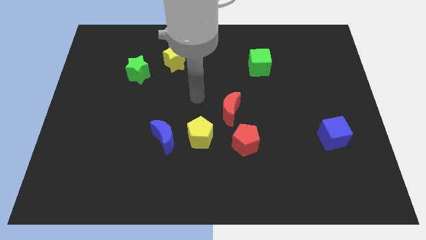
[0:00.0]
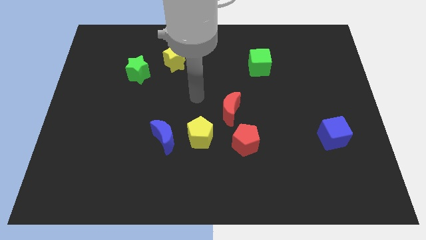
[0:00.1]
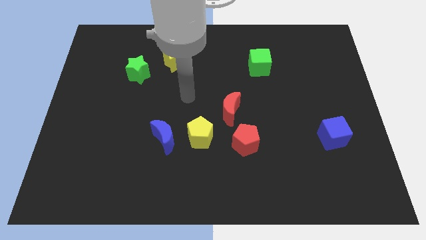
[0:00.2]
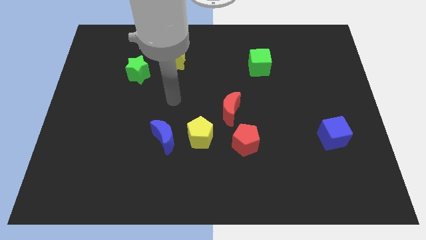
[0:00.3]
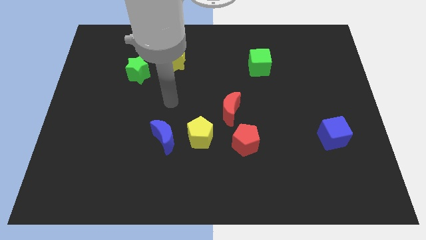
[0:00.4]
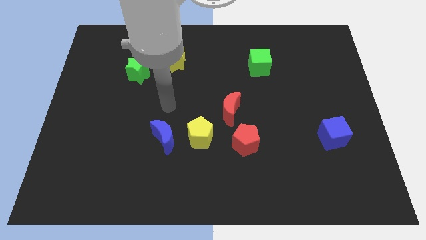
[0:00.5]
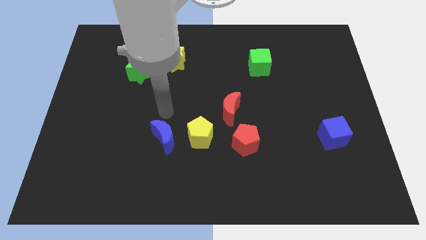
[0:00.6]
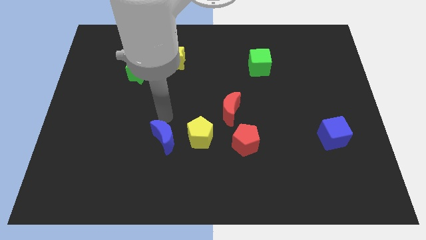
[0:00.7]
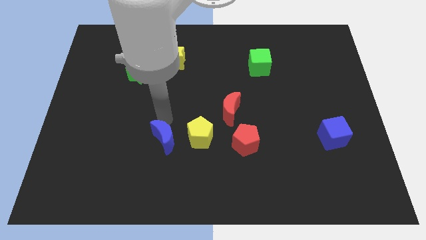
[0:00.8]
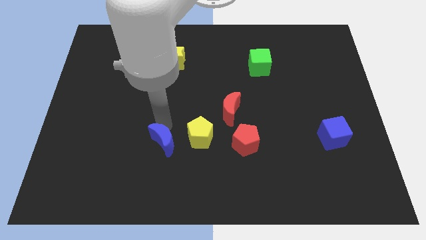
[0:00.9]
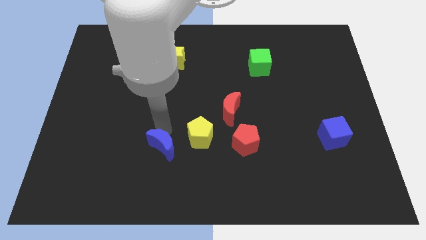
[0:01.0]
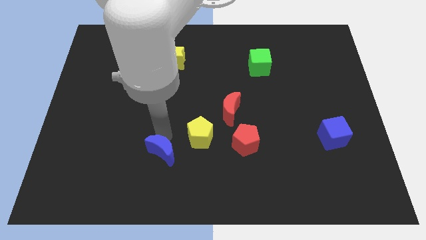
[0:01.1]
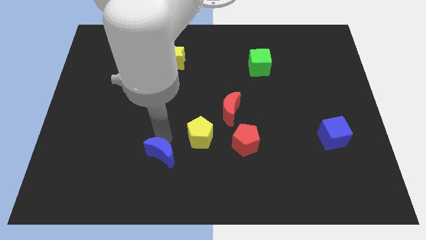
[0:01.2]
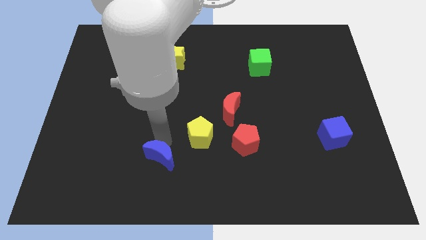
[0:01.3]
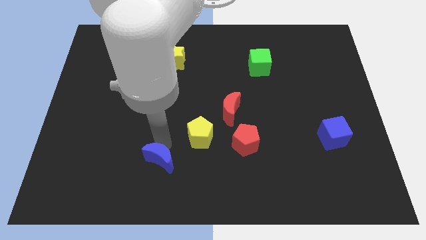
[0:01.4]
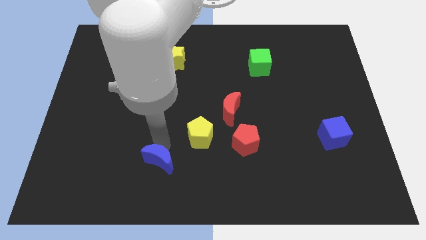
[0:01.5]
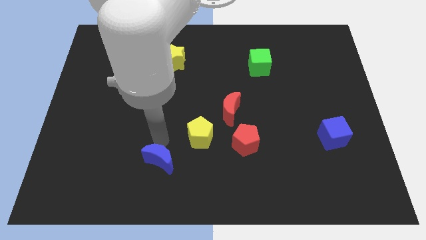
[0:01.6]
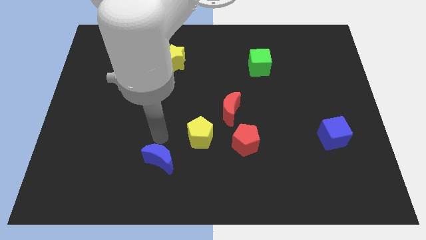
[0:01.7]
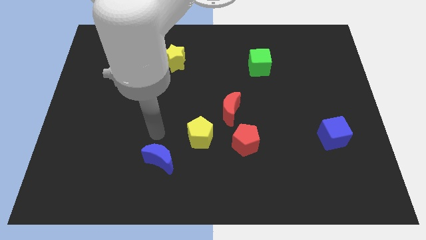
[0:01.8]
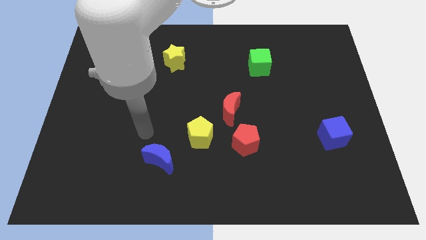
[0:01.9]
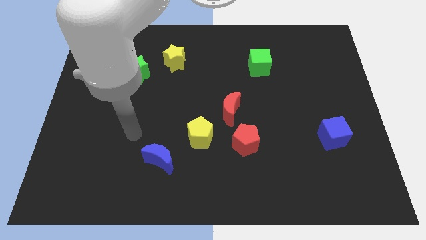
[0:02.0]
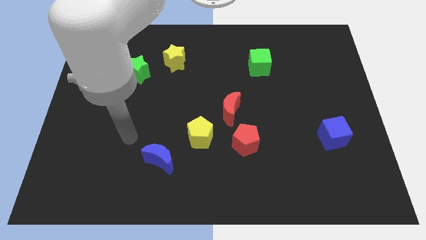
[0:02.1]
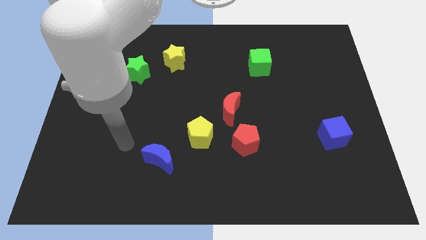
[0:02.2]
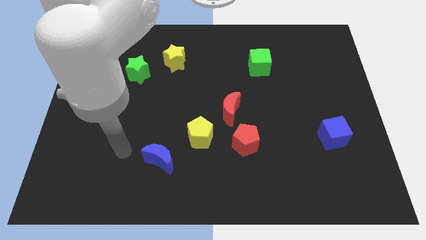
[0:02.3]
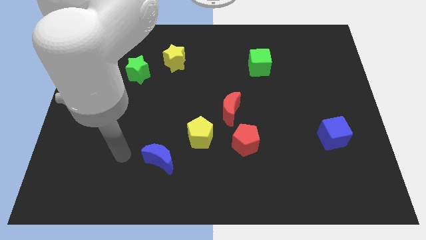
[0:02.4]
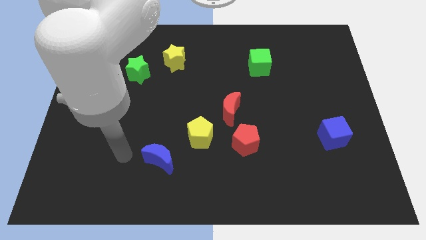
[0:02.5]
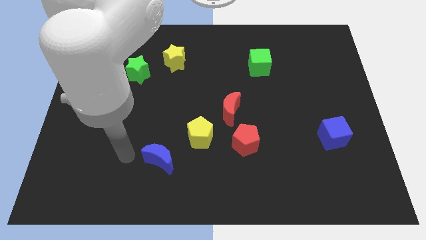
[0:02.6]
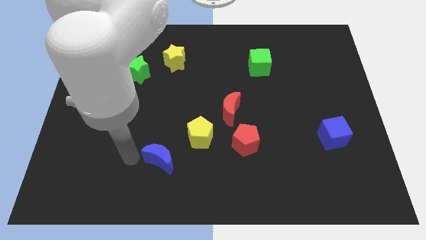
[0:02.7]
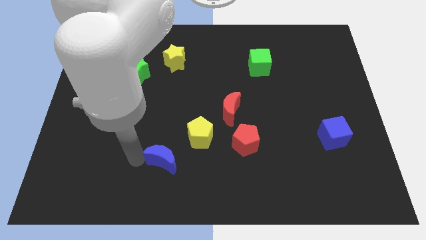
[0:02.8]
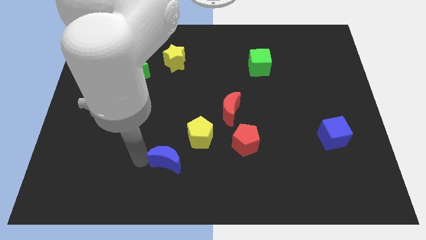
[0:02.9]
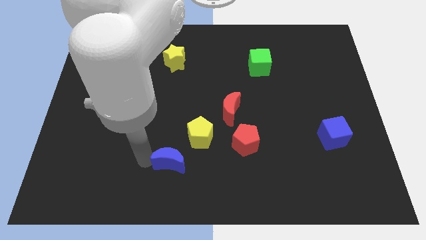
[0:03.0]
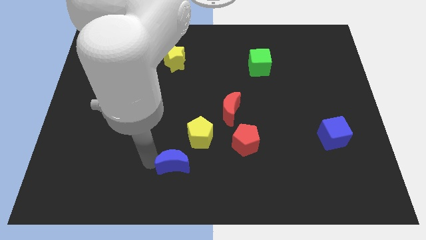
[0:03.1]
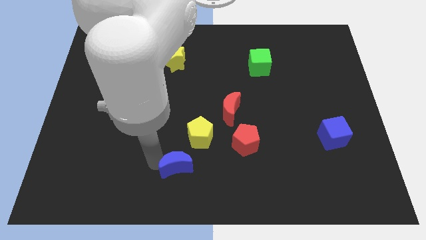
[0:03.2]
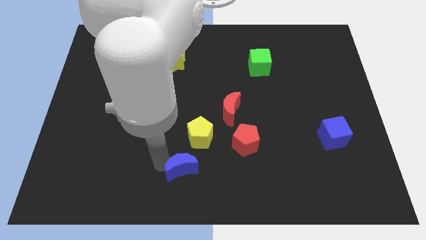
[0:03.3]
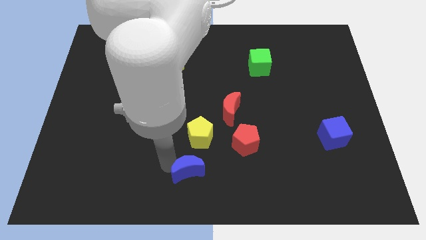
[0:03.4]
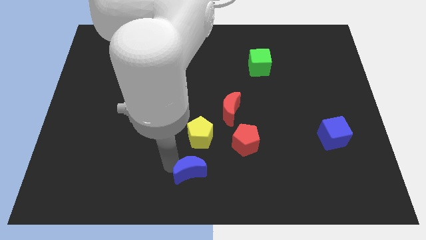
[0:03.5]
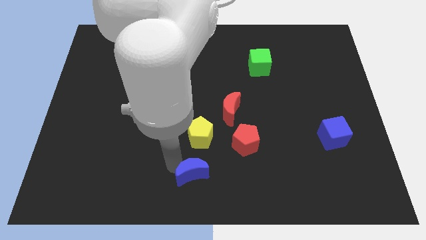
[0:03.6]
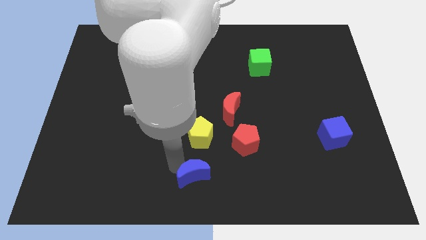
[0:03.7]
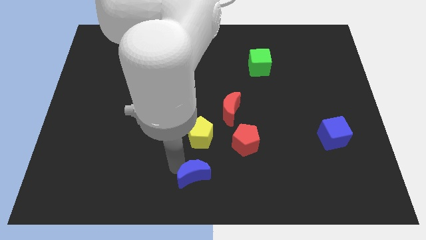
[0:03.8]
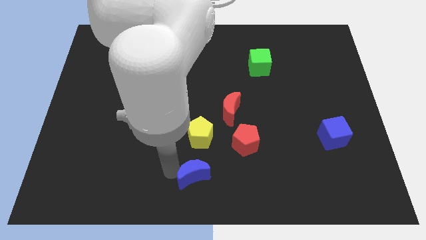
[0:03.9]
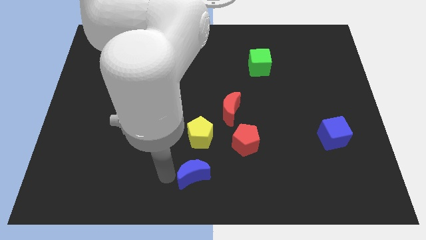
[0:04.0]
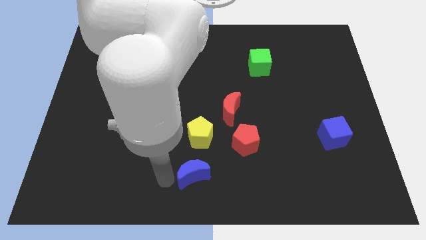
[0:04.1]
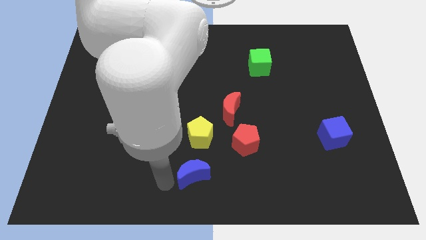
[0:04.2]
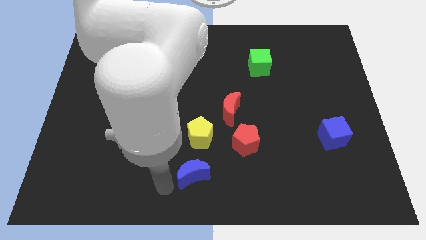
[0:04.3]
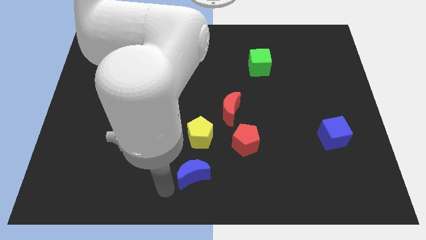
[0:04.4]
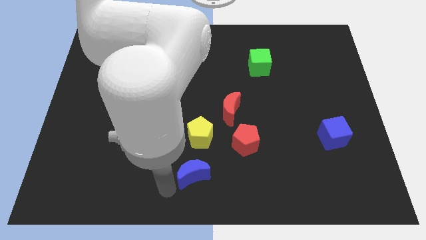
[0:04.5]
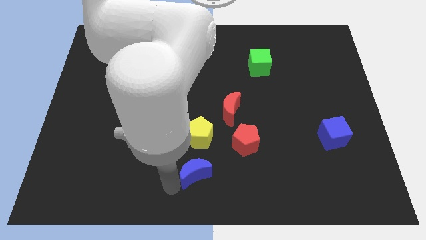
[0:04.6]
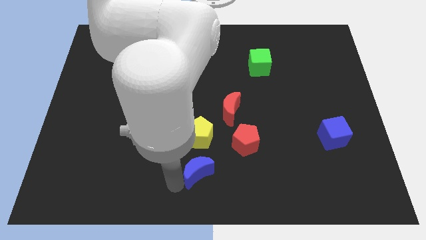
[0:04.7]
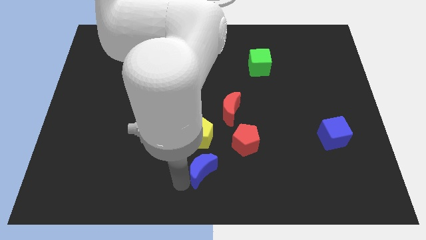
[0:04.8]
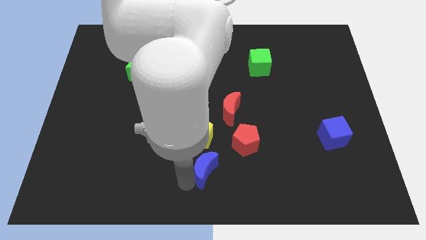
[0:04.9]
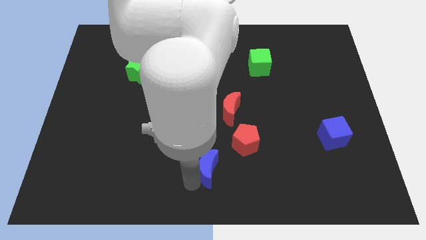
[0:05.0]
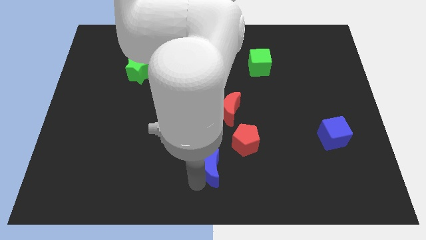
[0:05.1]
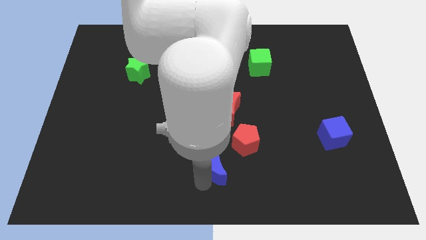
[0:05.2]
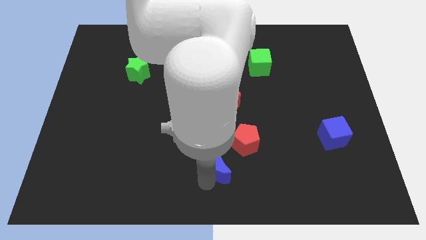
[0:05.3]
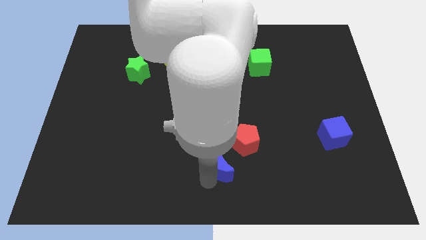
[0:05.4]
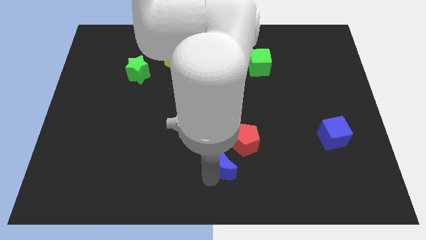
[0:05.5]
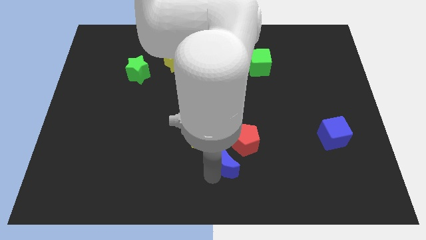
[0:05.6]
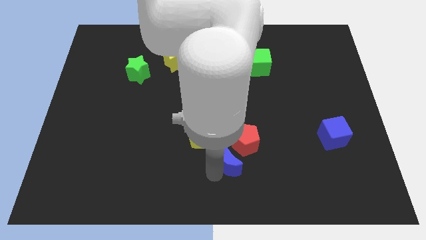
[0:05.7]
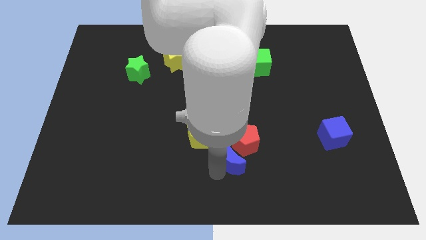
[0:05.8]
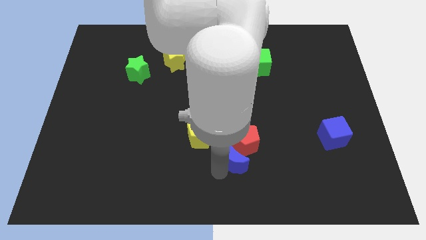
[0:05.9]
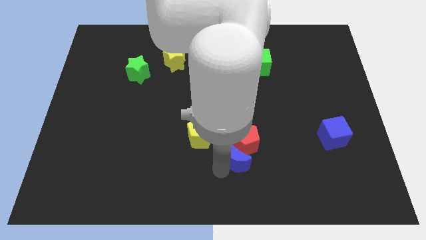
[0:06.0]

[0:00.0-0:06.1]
push the blue moon to the red pentagon

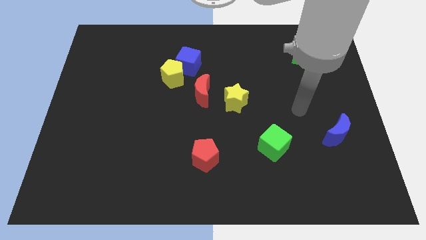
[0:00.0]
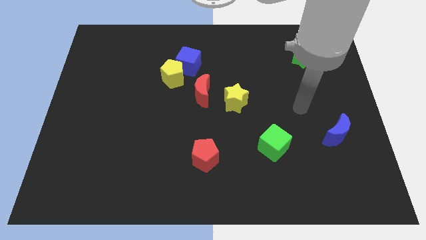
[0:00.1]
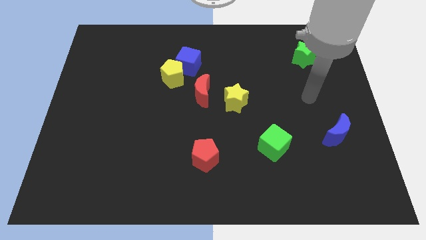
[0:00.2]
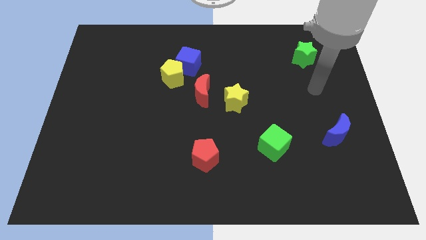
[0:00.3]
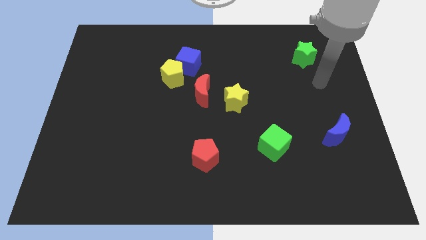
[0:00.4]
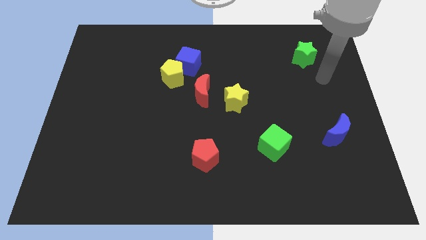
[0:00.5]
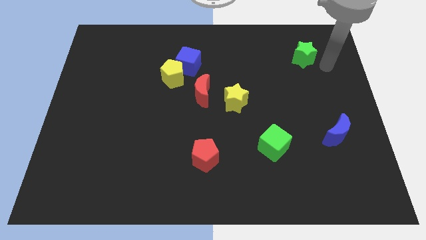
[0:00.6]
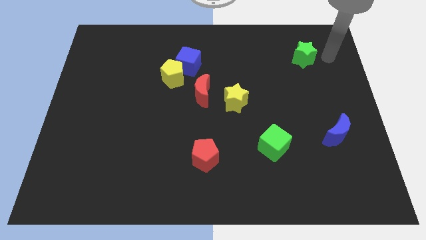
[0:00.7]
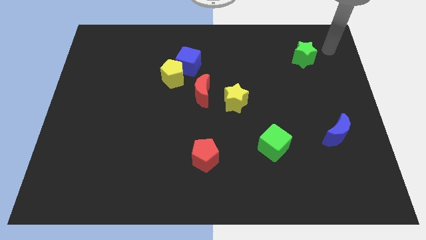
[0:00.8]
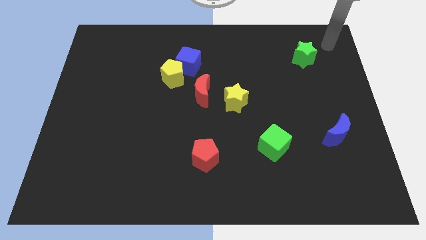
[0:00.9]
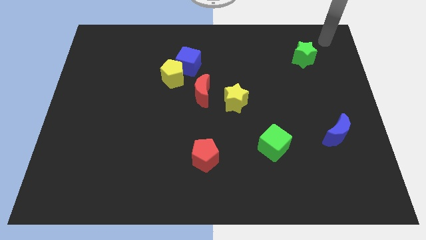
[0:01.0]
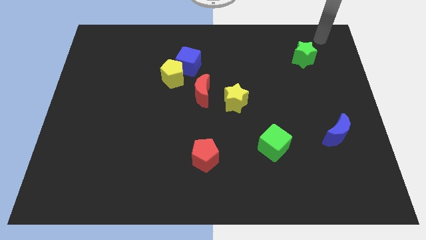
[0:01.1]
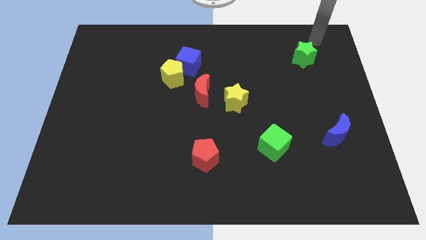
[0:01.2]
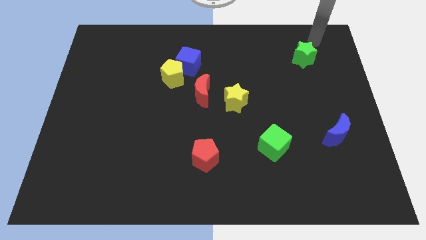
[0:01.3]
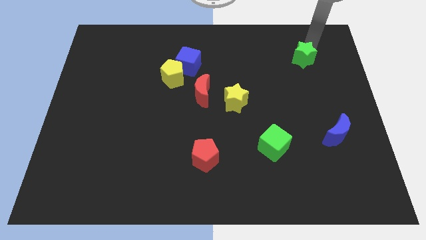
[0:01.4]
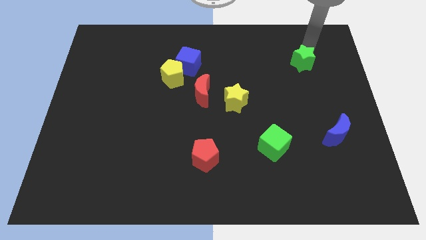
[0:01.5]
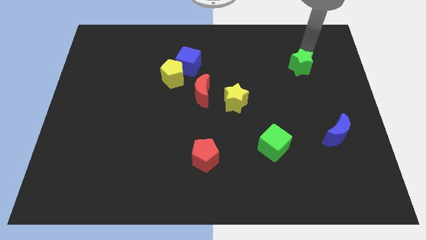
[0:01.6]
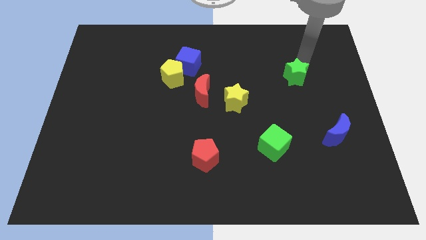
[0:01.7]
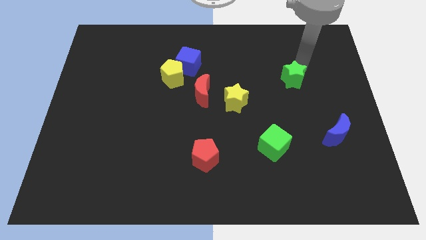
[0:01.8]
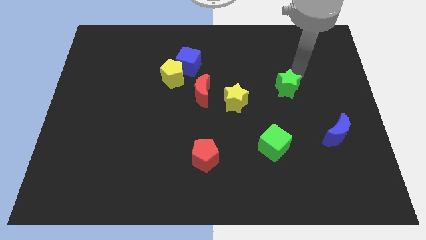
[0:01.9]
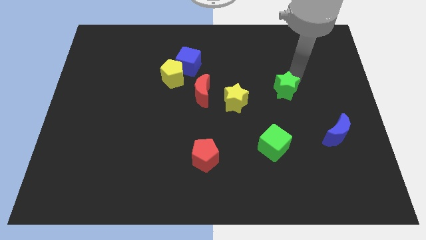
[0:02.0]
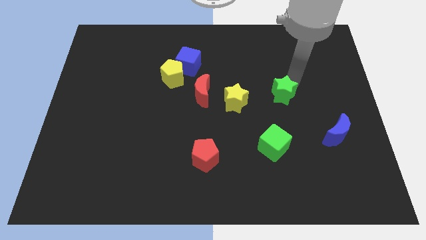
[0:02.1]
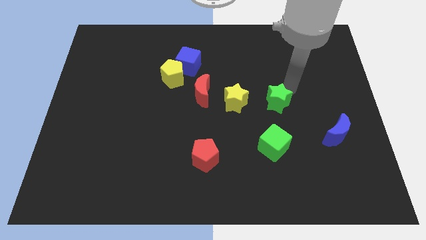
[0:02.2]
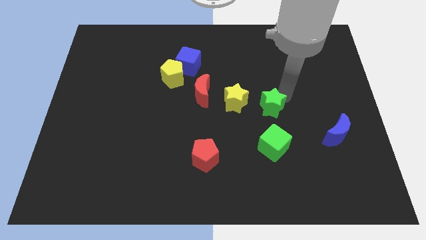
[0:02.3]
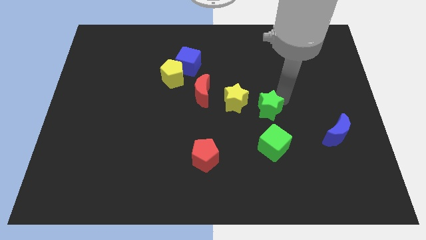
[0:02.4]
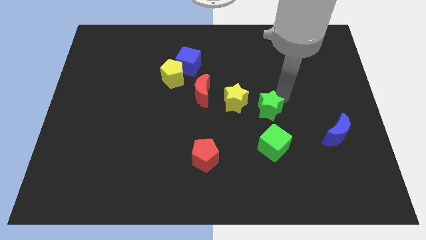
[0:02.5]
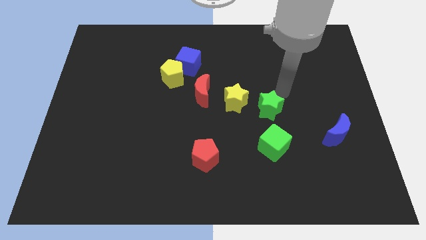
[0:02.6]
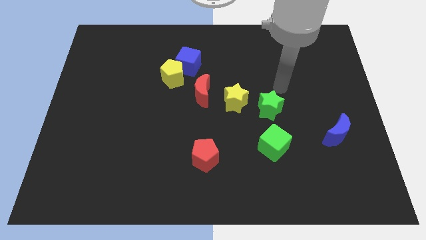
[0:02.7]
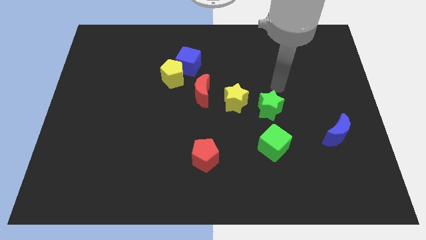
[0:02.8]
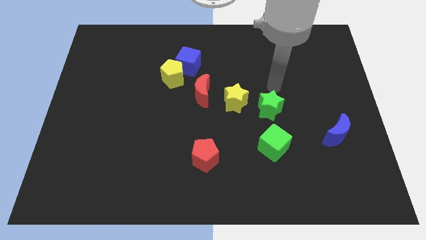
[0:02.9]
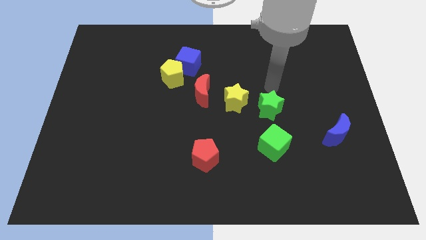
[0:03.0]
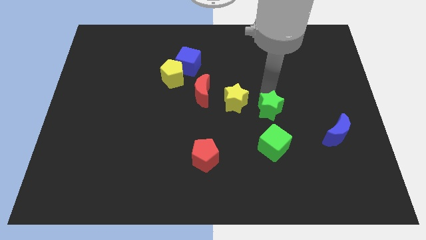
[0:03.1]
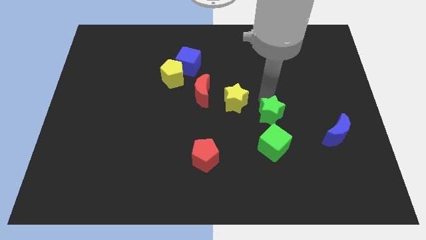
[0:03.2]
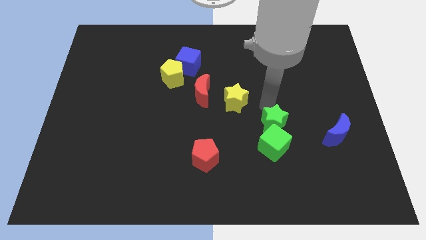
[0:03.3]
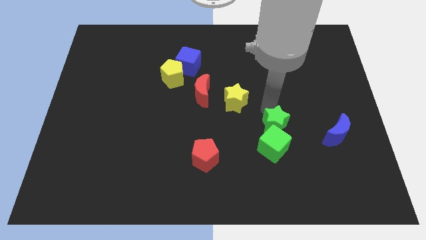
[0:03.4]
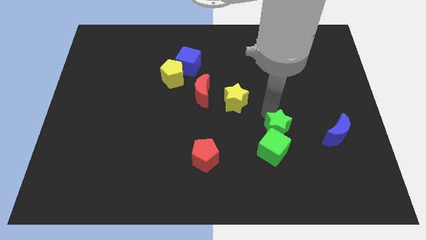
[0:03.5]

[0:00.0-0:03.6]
move the green star to the green cube
